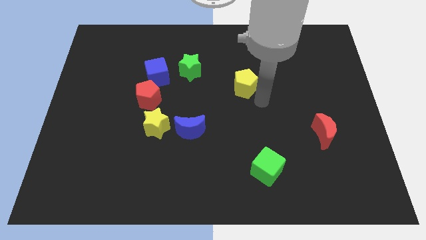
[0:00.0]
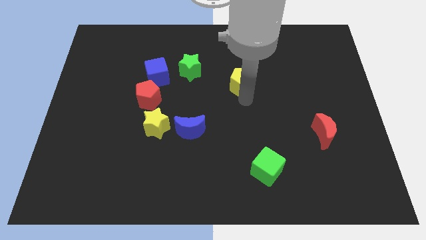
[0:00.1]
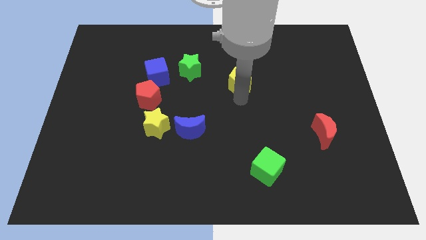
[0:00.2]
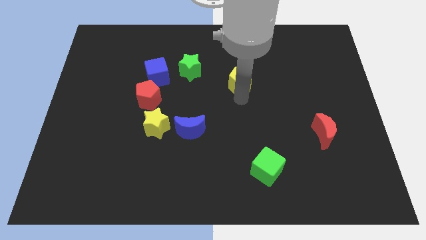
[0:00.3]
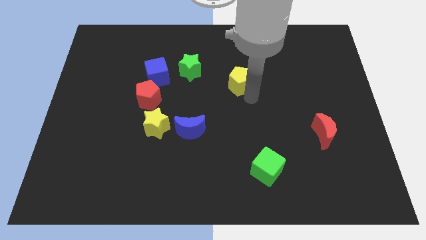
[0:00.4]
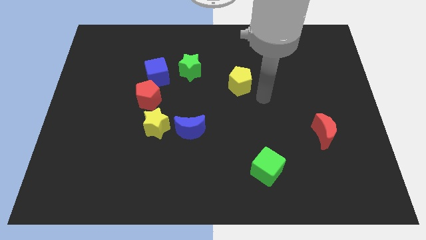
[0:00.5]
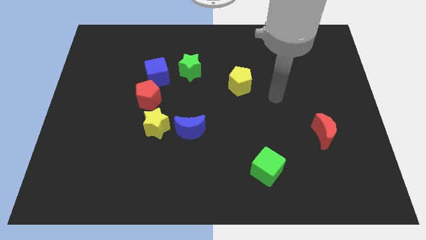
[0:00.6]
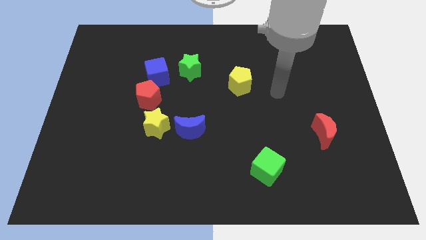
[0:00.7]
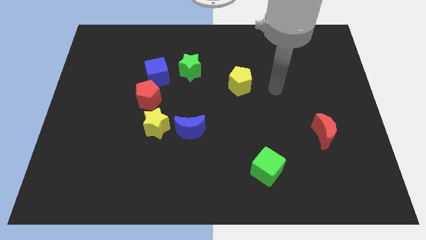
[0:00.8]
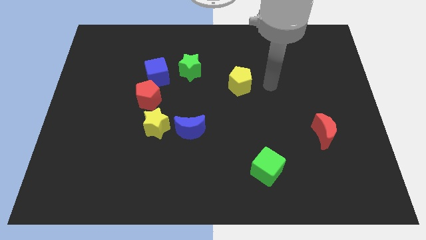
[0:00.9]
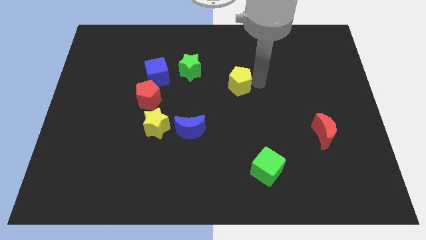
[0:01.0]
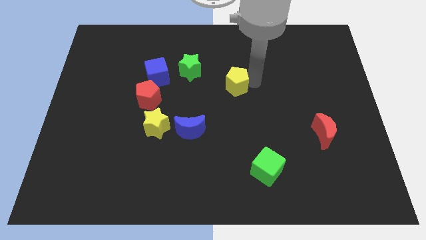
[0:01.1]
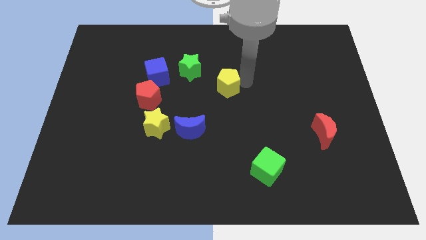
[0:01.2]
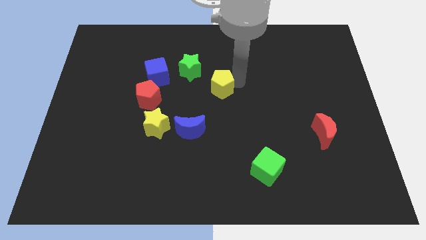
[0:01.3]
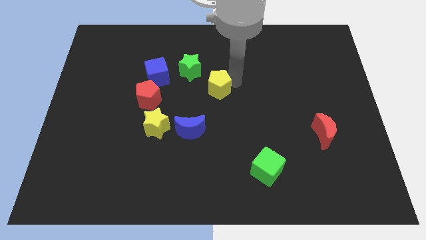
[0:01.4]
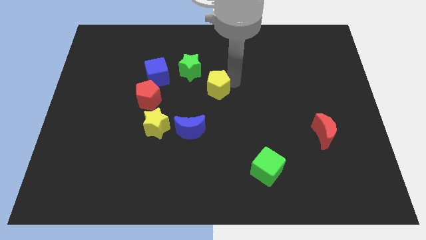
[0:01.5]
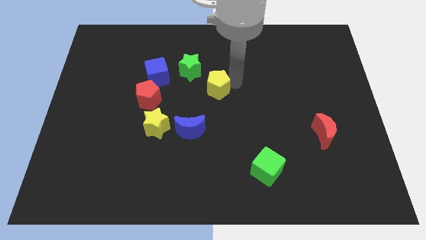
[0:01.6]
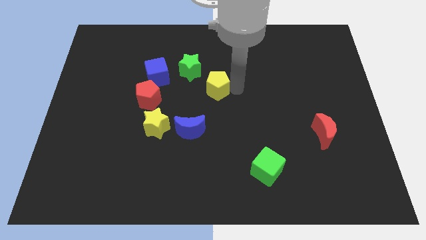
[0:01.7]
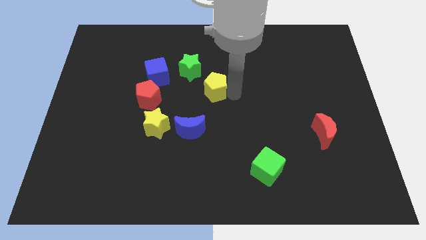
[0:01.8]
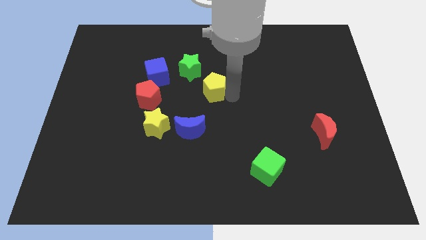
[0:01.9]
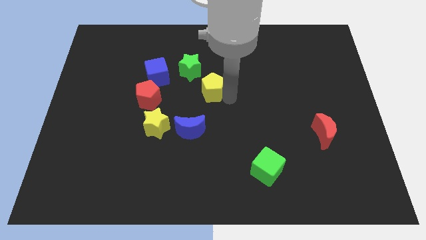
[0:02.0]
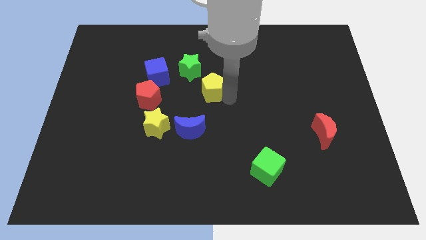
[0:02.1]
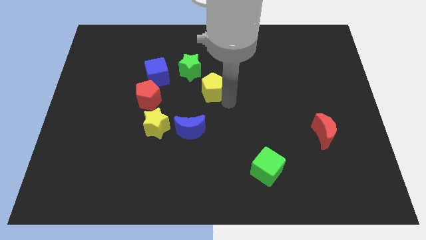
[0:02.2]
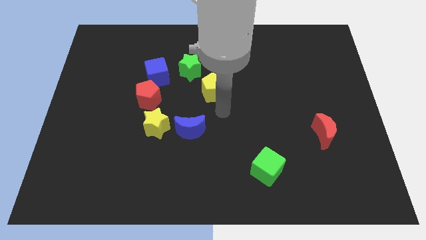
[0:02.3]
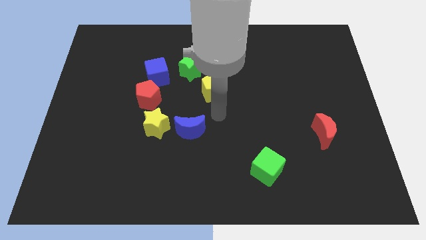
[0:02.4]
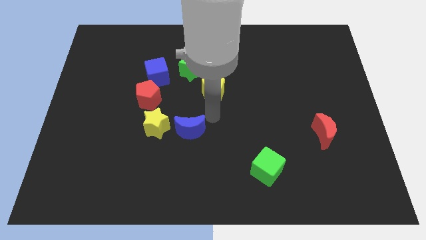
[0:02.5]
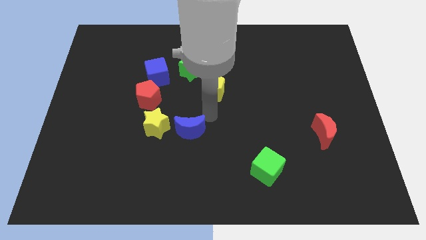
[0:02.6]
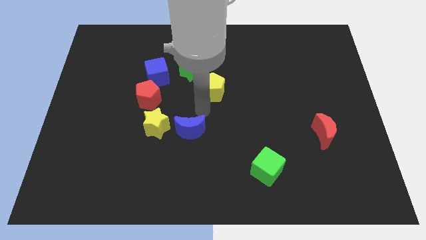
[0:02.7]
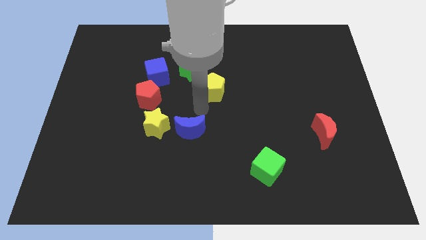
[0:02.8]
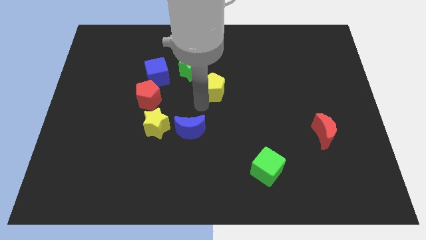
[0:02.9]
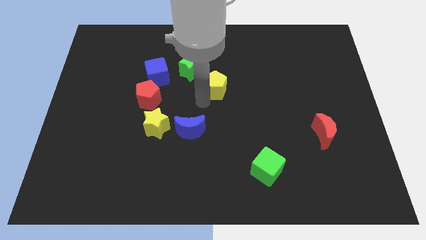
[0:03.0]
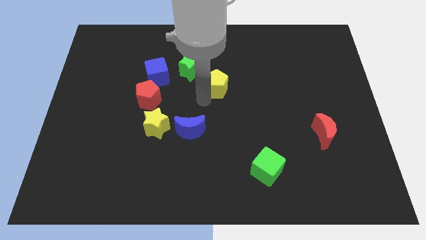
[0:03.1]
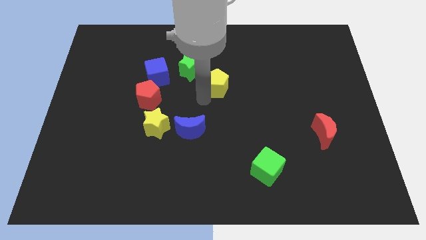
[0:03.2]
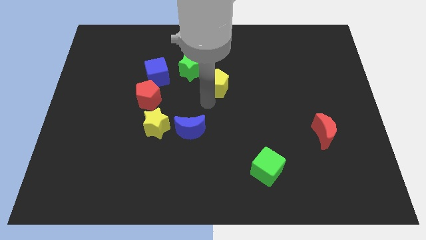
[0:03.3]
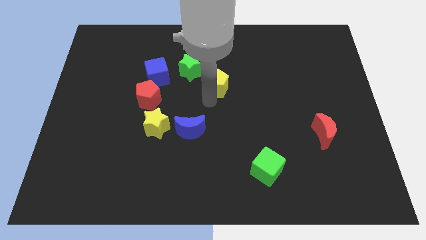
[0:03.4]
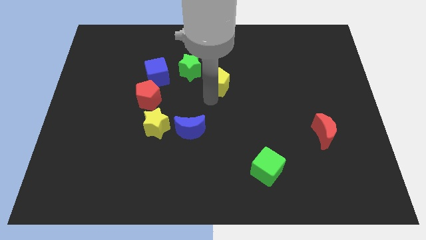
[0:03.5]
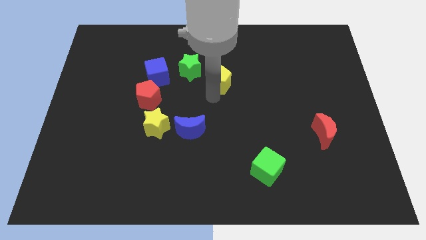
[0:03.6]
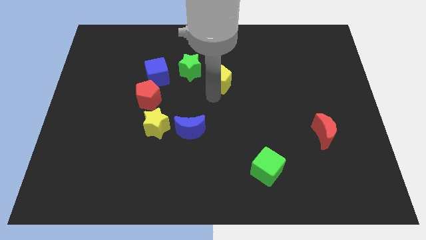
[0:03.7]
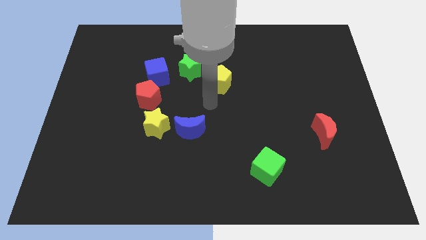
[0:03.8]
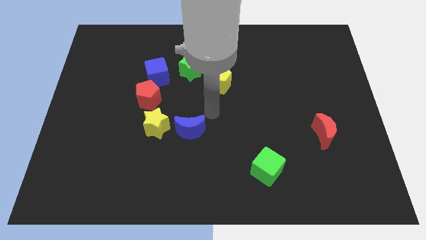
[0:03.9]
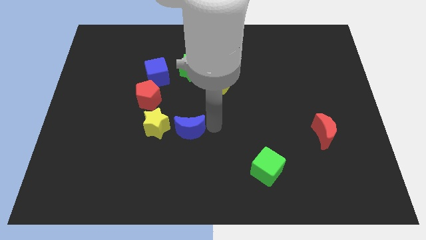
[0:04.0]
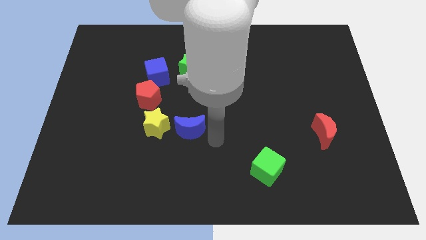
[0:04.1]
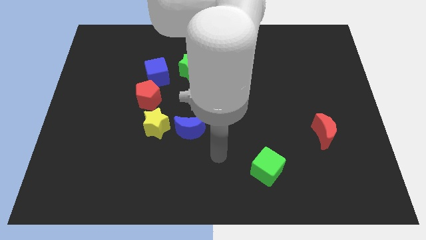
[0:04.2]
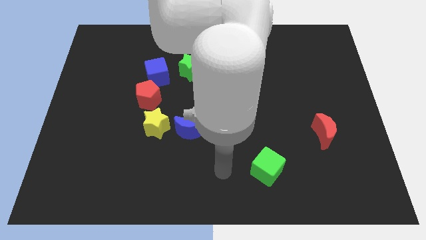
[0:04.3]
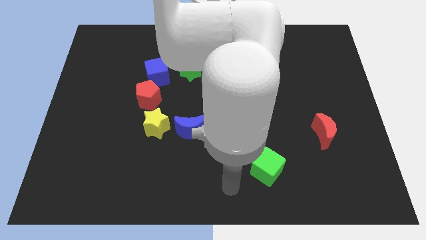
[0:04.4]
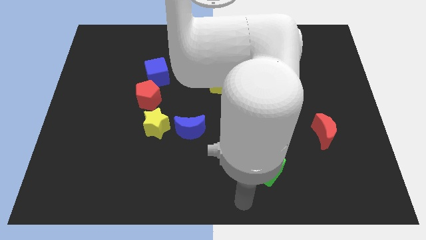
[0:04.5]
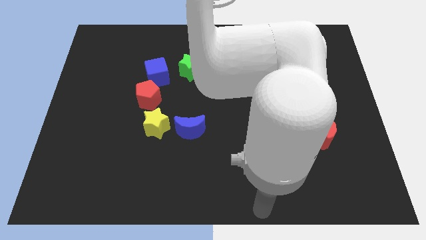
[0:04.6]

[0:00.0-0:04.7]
put the yellow pentagon at the bottom right side of the green star

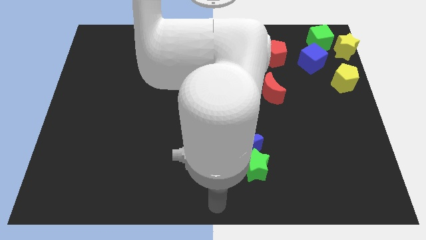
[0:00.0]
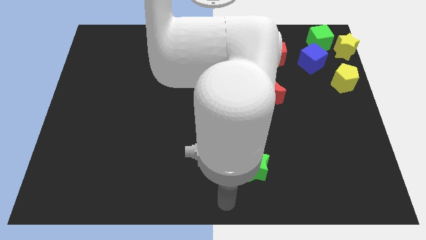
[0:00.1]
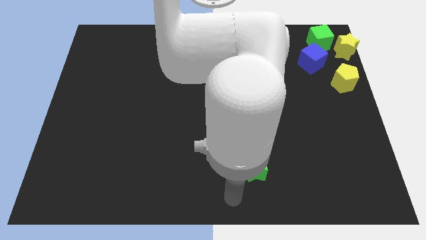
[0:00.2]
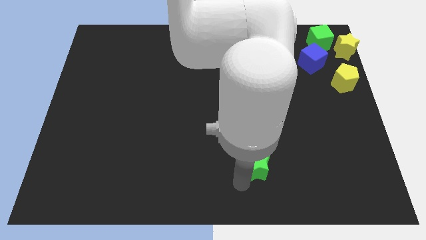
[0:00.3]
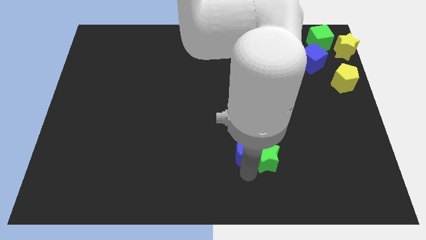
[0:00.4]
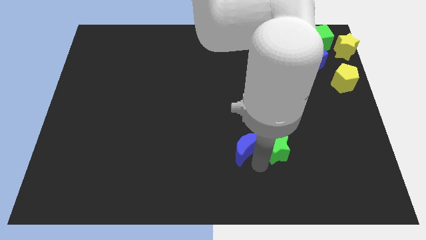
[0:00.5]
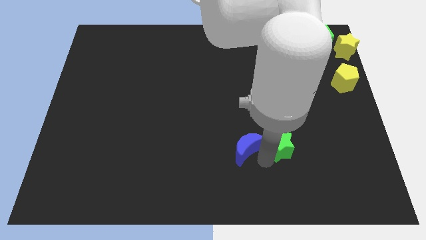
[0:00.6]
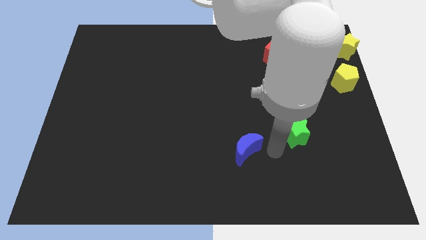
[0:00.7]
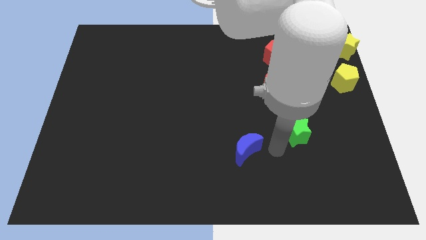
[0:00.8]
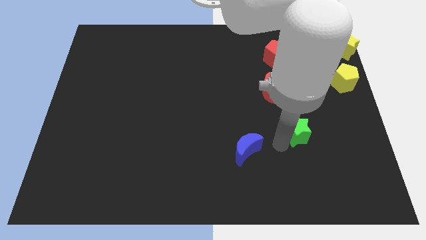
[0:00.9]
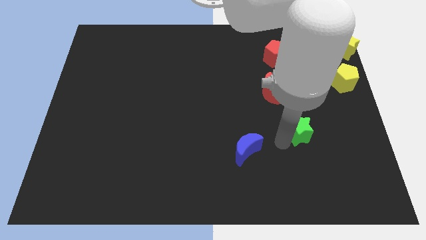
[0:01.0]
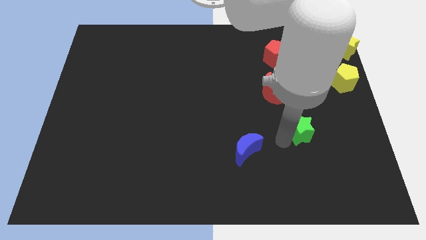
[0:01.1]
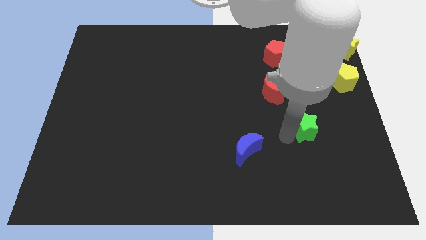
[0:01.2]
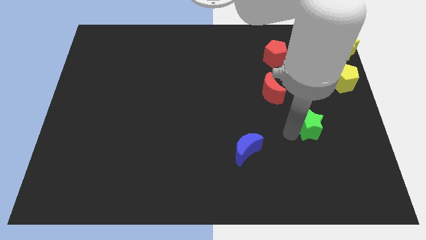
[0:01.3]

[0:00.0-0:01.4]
push the green star away from blue moon

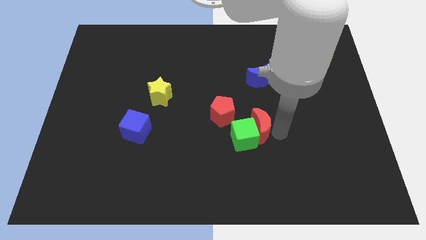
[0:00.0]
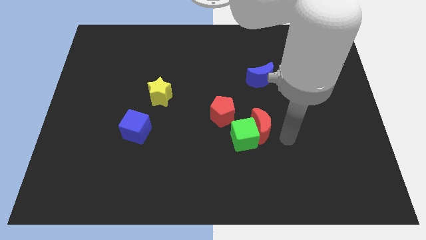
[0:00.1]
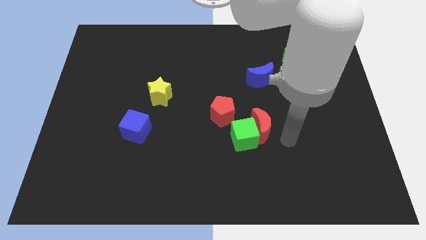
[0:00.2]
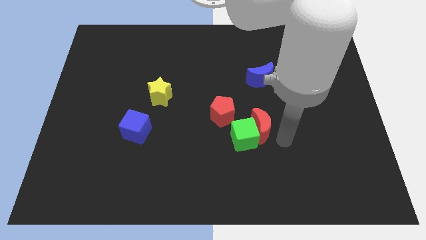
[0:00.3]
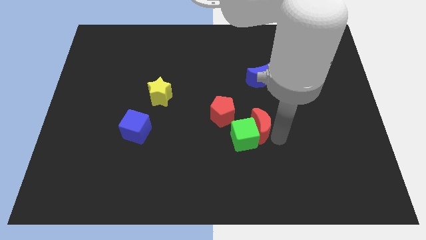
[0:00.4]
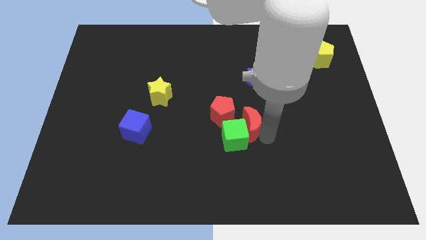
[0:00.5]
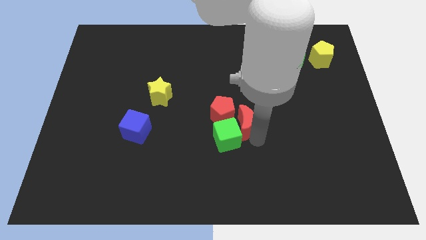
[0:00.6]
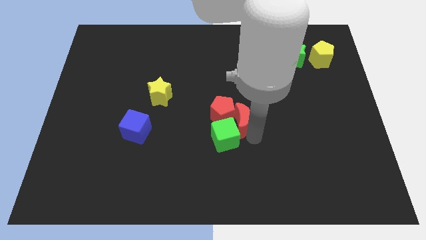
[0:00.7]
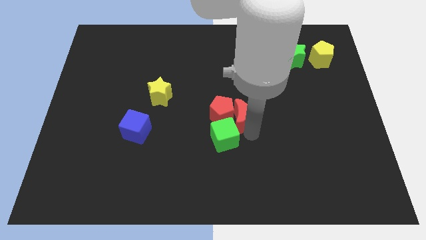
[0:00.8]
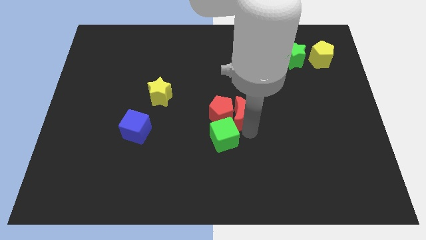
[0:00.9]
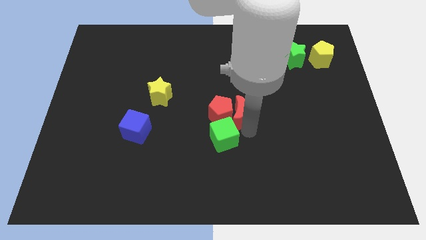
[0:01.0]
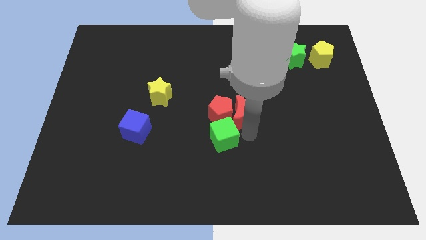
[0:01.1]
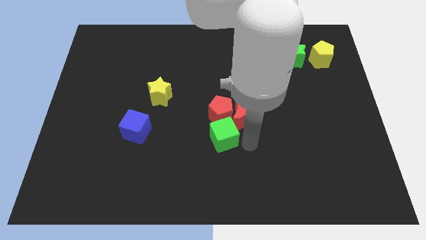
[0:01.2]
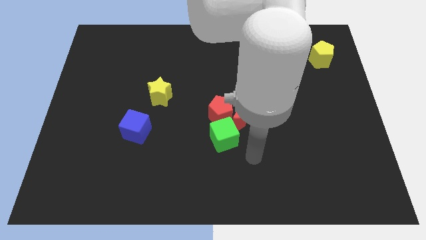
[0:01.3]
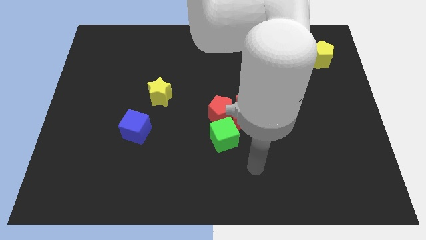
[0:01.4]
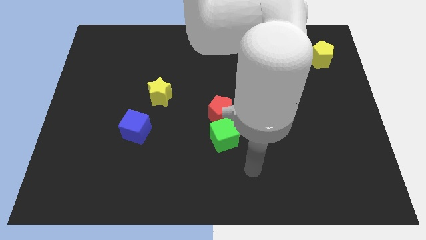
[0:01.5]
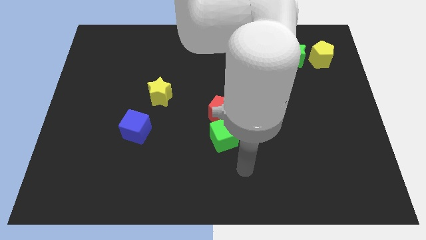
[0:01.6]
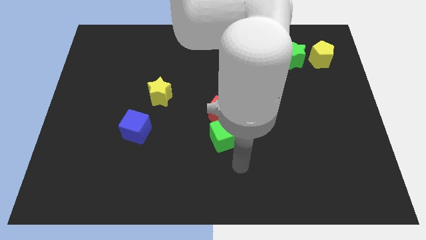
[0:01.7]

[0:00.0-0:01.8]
move the green cube below the red pentagon

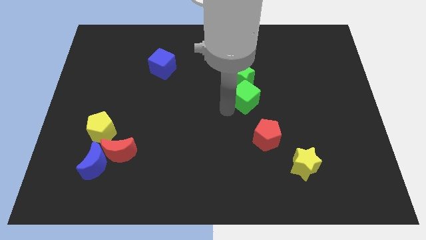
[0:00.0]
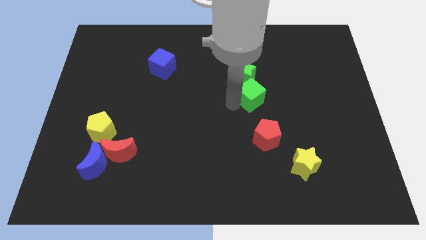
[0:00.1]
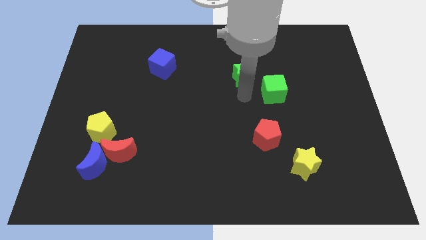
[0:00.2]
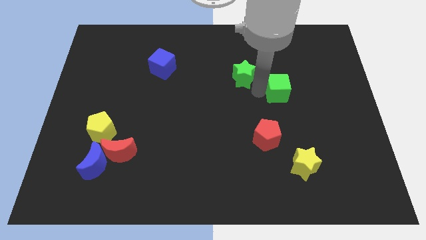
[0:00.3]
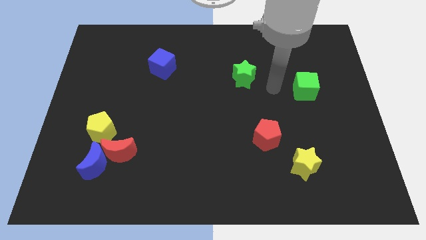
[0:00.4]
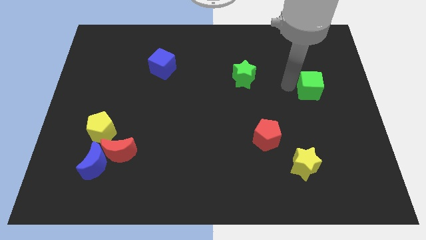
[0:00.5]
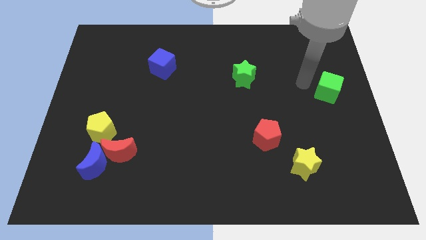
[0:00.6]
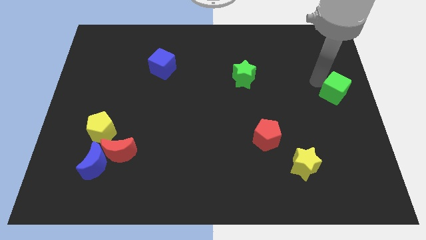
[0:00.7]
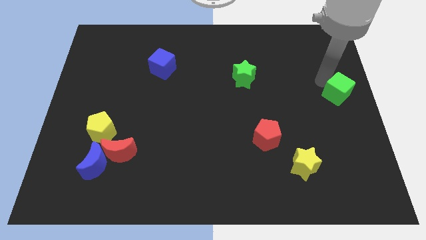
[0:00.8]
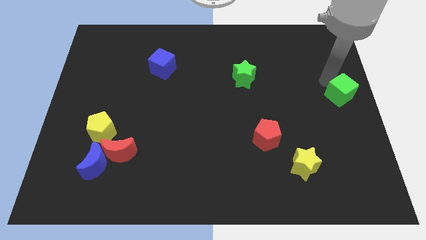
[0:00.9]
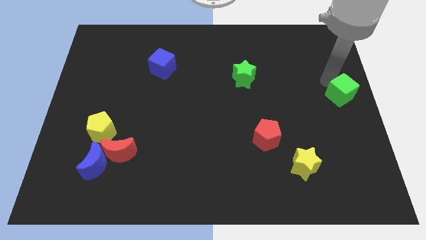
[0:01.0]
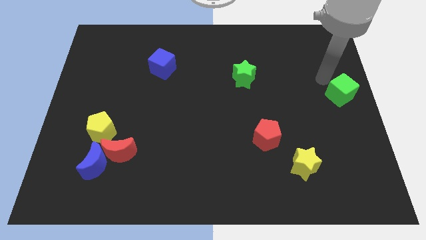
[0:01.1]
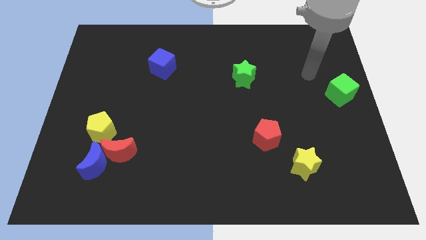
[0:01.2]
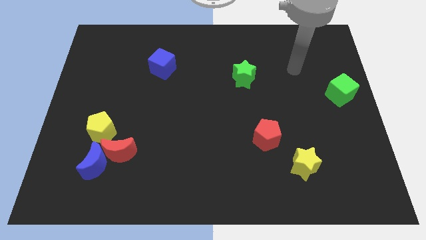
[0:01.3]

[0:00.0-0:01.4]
move green cube to the right center of the board
